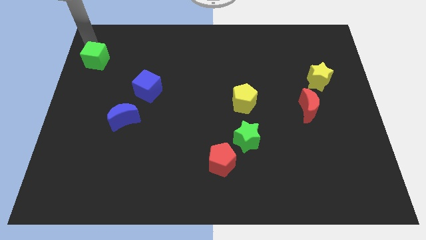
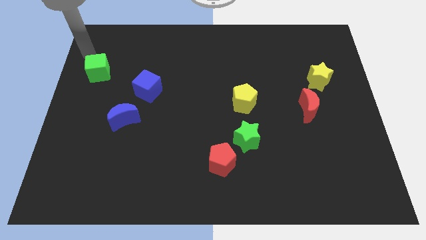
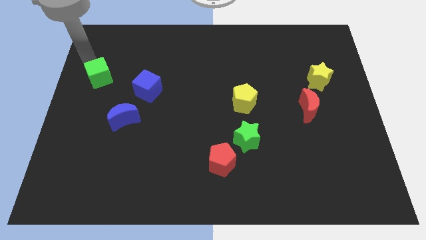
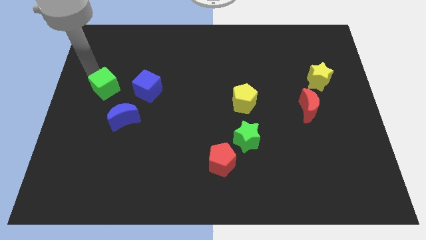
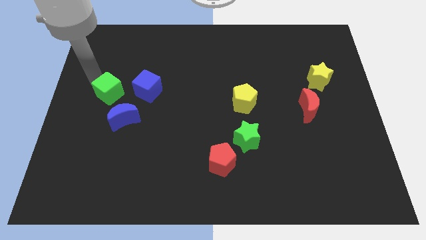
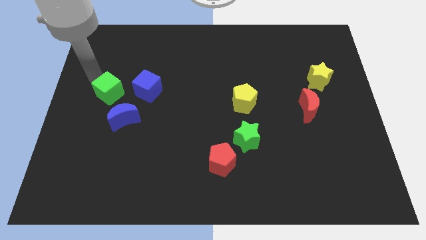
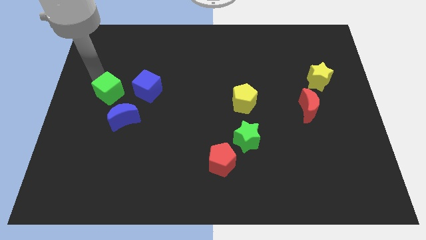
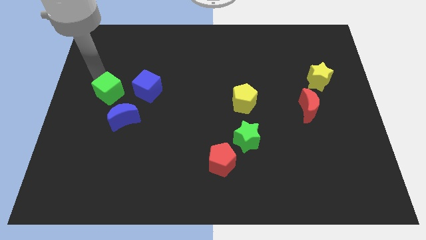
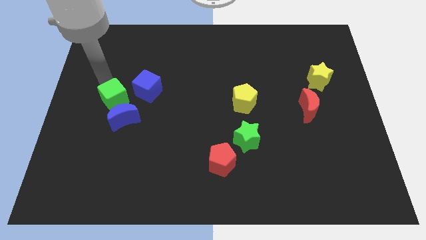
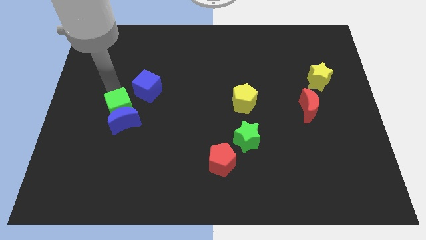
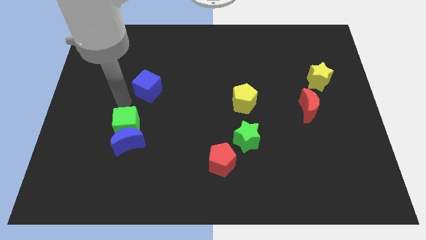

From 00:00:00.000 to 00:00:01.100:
move the green cube to the top of the blue crescent

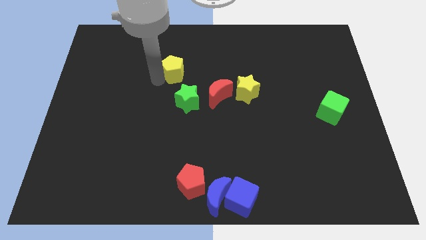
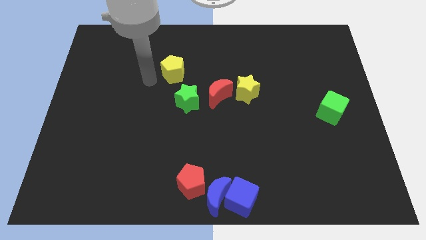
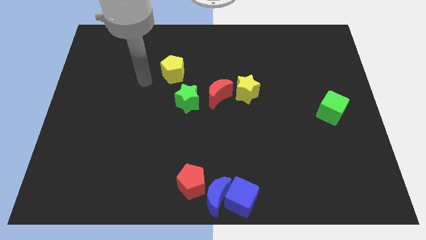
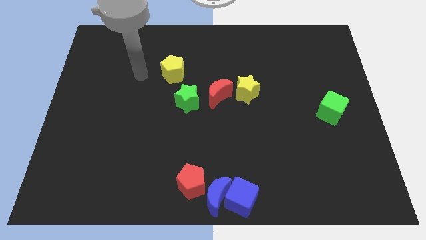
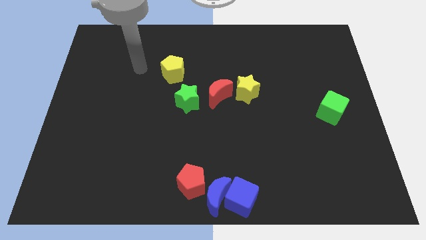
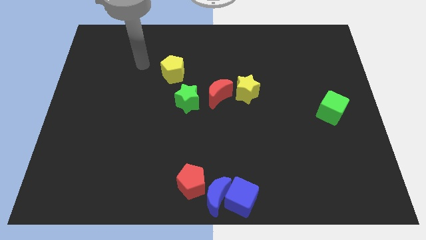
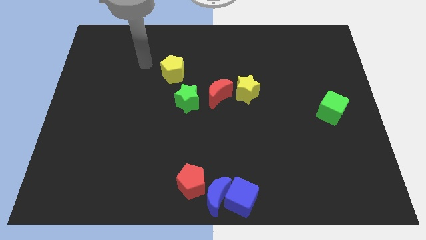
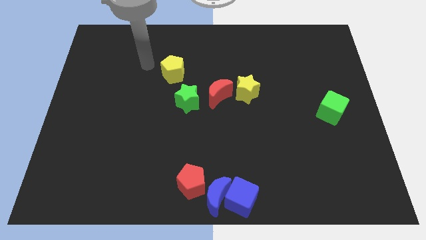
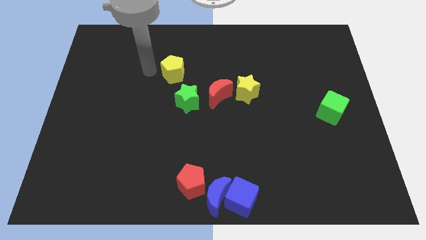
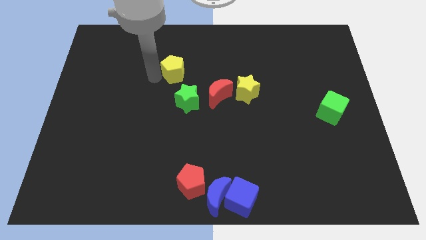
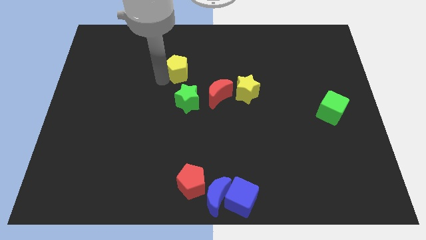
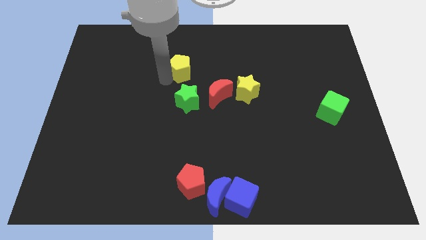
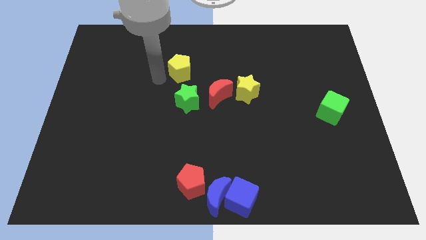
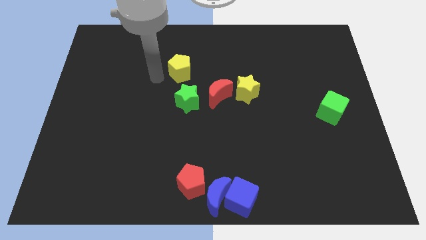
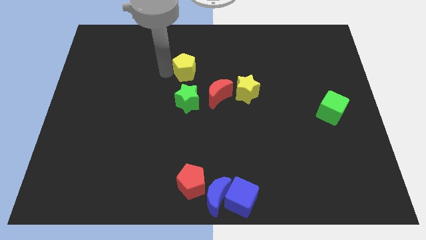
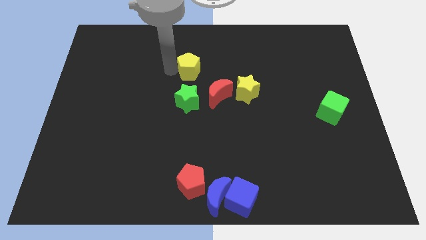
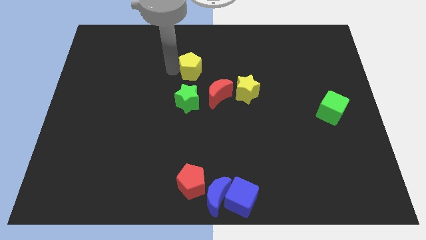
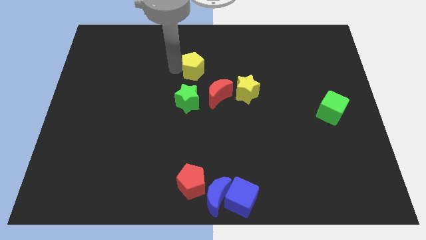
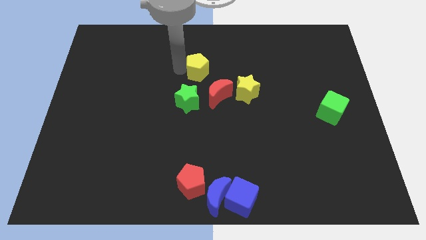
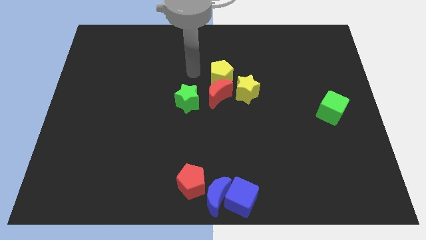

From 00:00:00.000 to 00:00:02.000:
drag the yellow pentagon to the top side of the red crescent

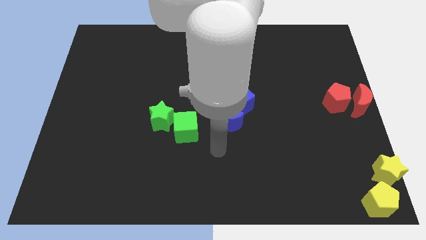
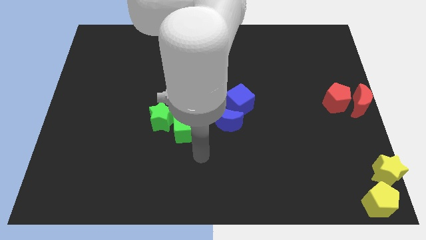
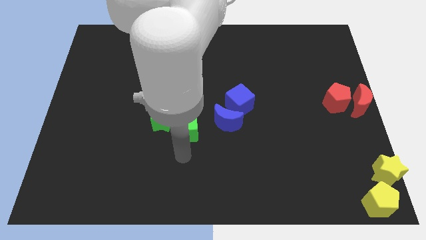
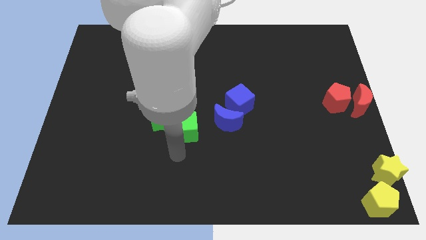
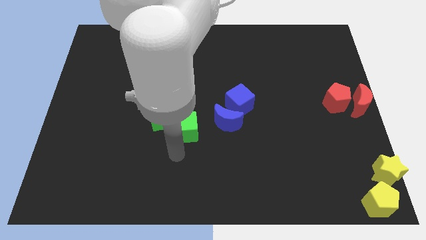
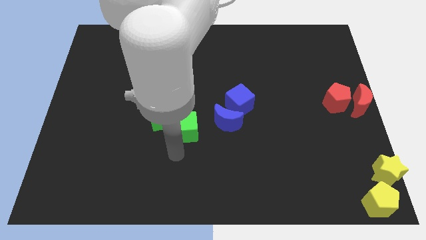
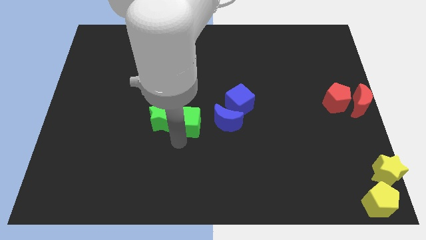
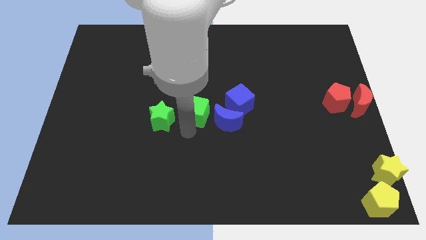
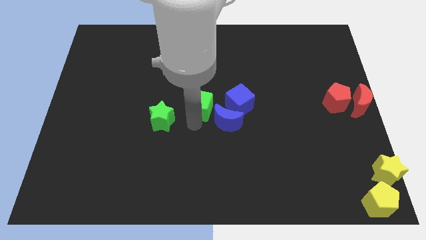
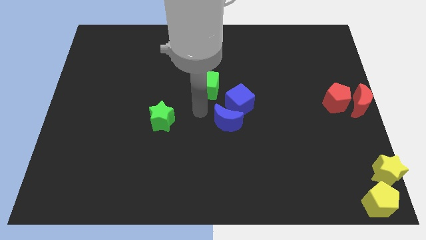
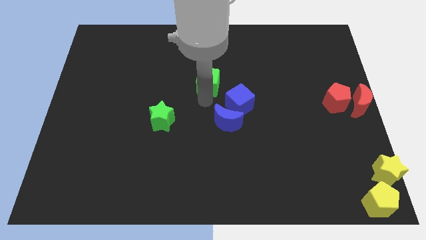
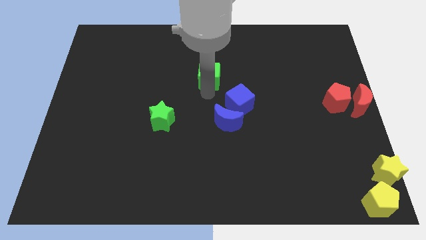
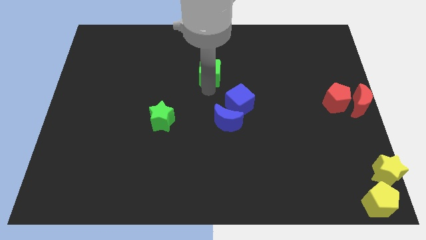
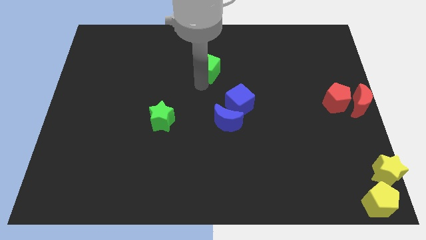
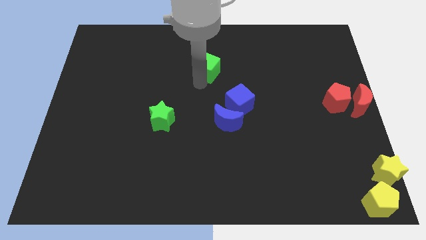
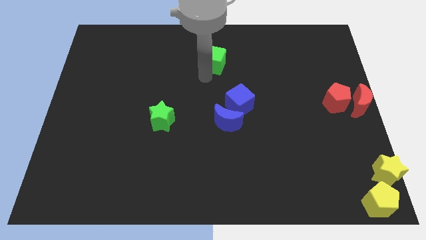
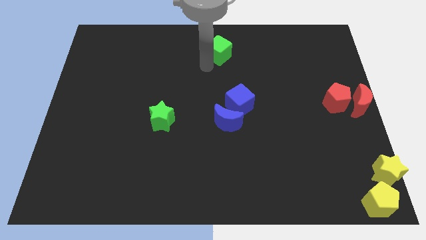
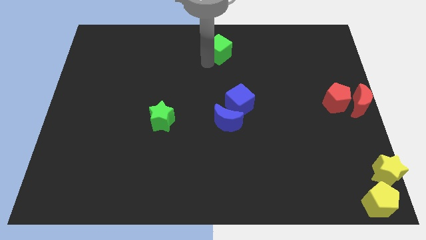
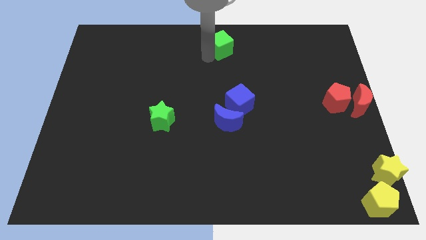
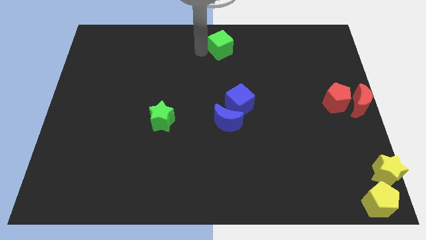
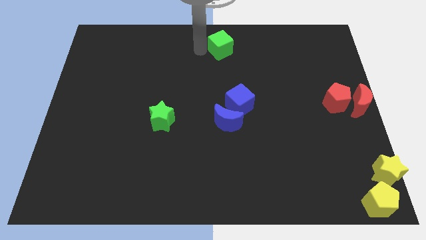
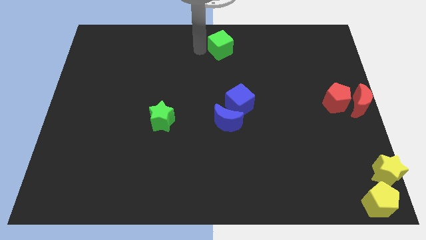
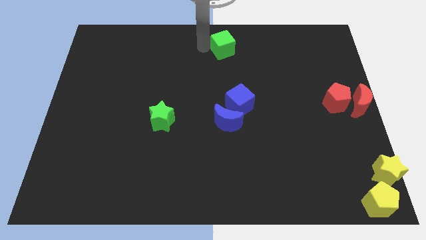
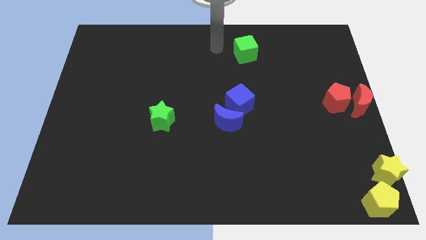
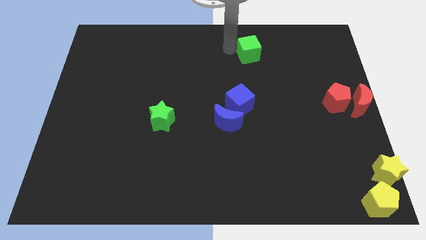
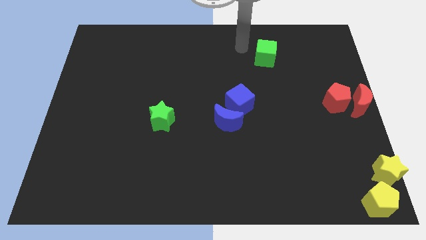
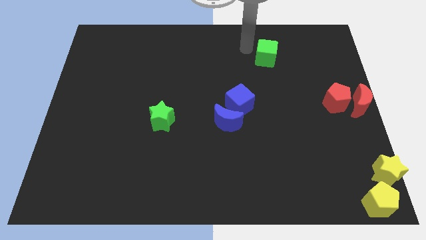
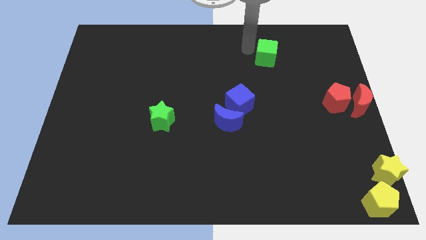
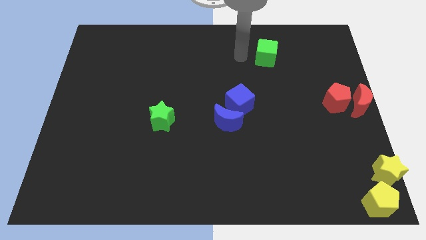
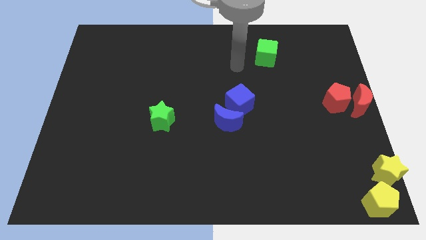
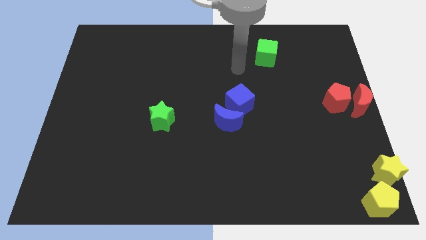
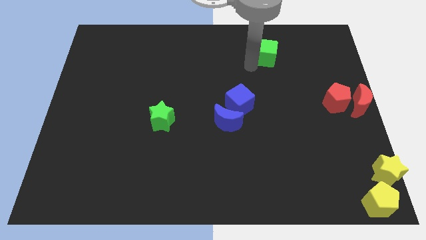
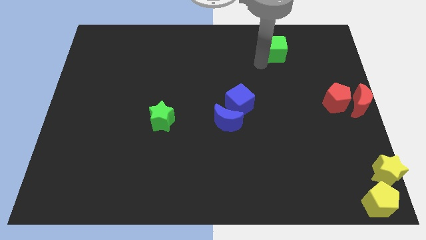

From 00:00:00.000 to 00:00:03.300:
separate the green cube from the green star

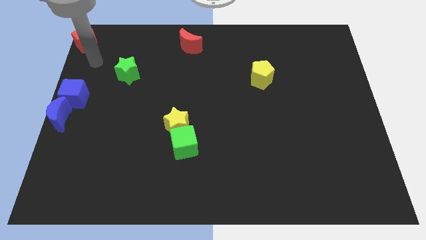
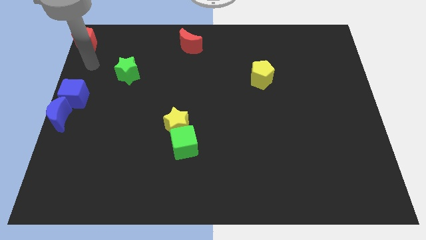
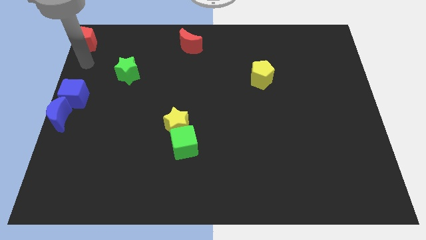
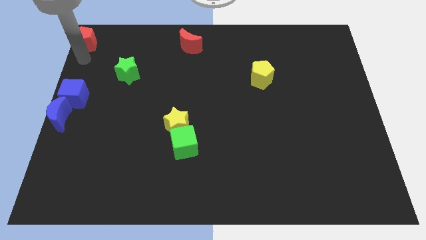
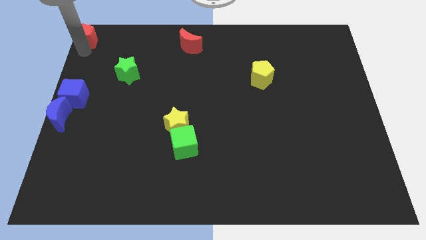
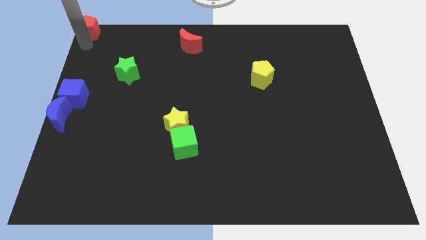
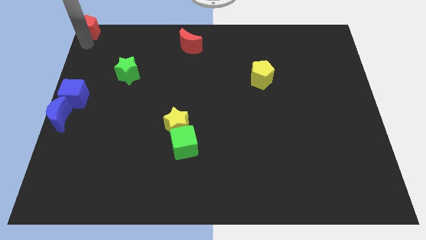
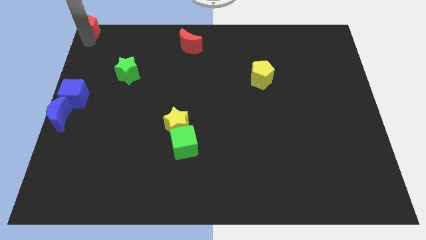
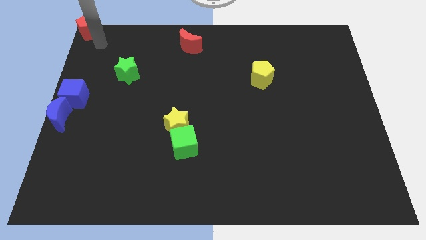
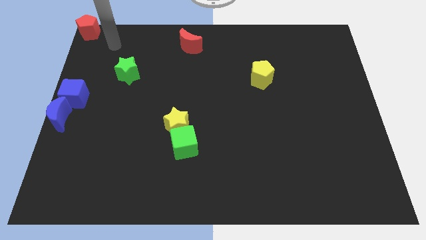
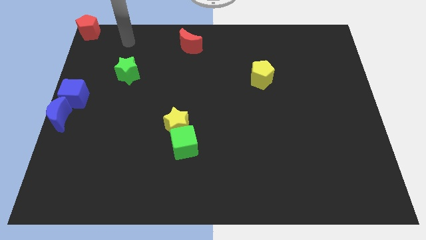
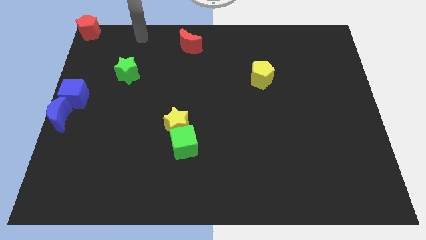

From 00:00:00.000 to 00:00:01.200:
place the red pentagon at the top left corner of the board

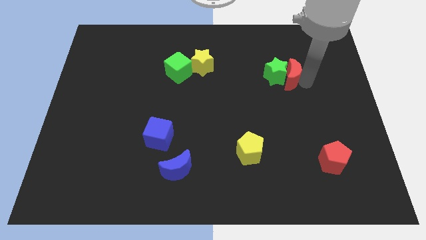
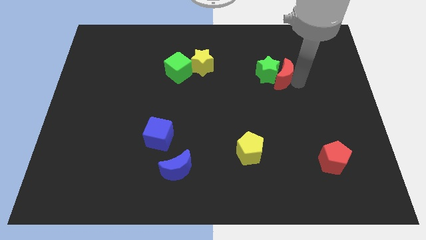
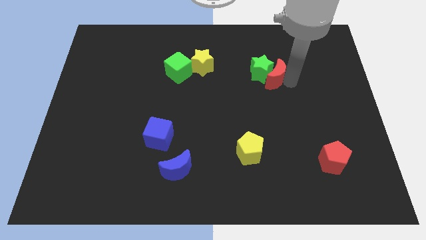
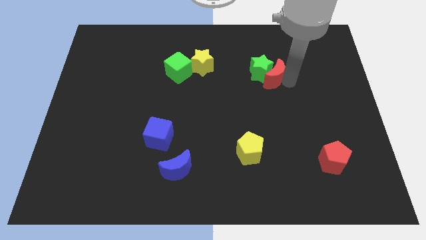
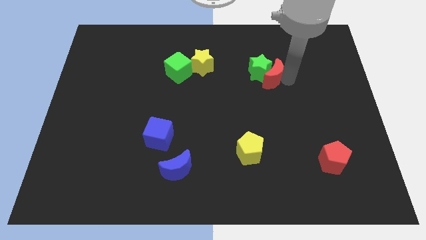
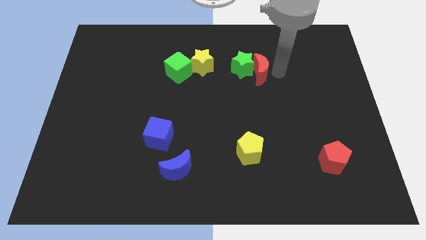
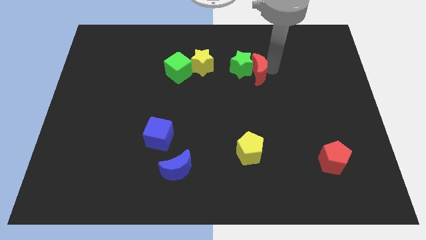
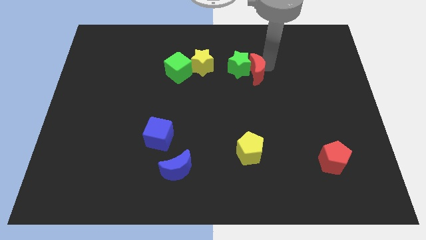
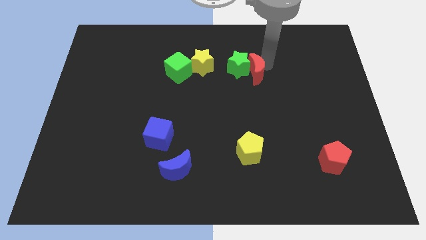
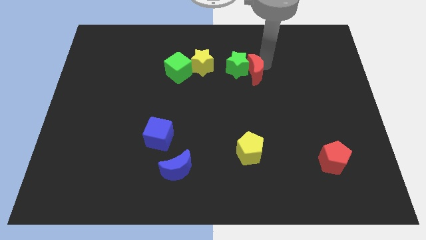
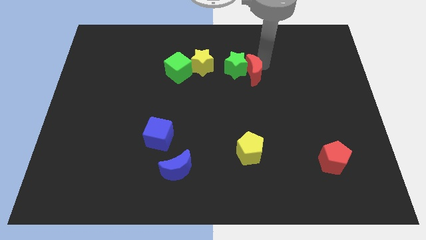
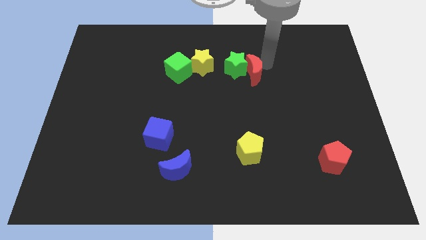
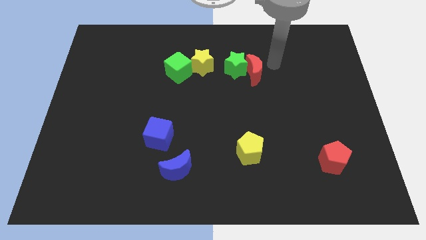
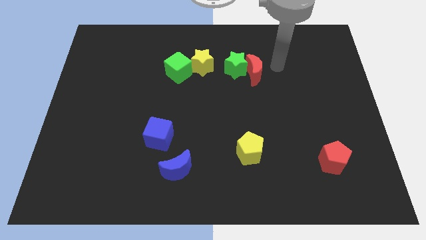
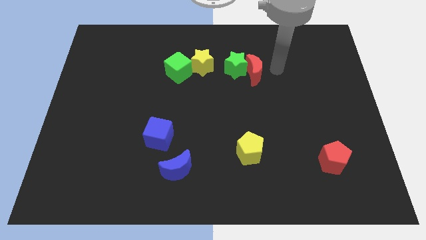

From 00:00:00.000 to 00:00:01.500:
move the green star and red crescent to the left side
